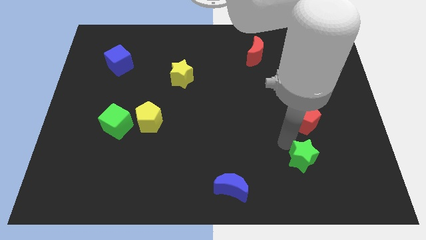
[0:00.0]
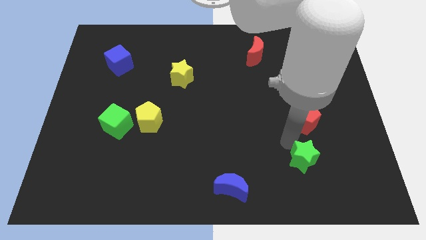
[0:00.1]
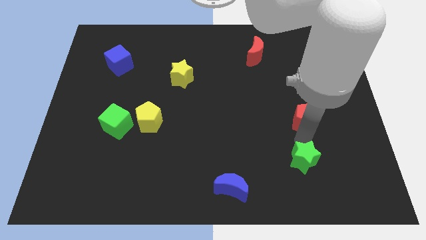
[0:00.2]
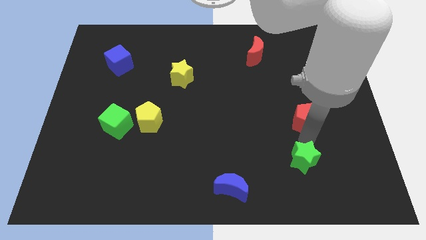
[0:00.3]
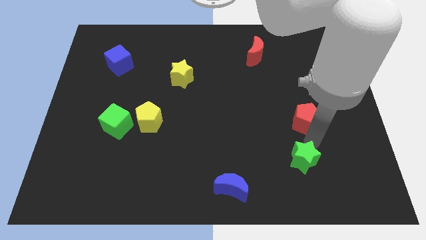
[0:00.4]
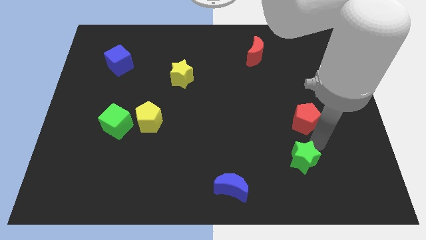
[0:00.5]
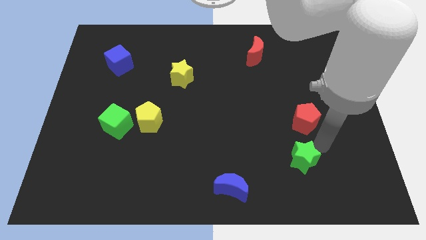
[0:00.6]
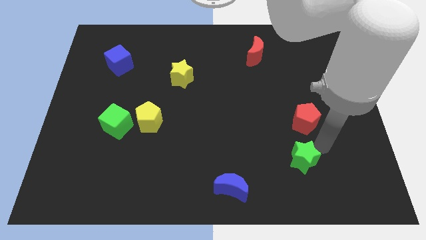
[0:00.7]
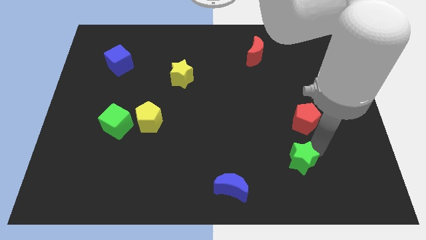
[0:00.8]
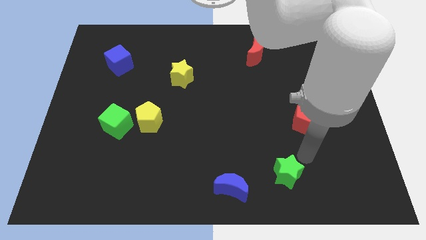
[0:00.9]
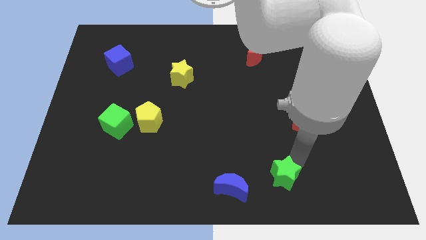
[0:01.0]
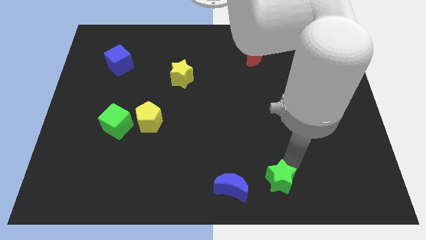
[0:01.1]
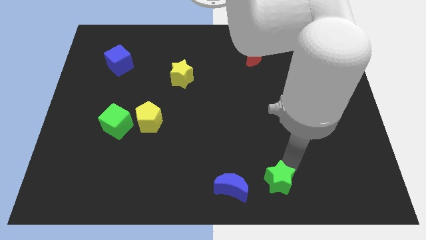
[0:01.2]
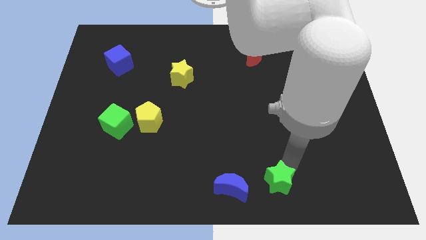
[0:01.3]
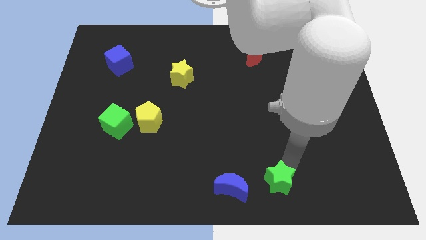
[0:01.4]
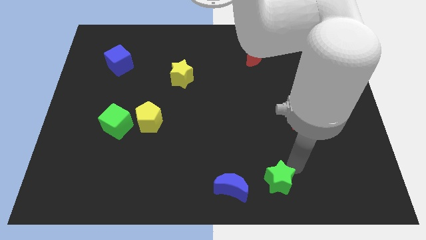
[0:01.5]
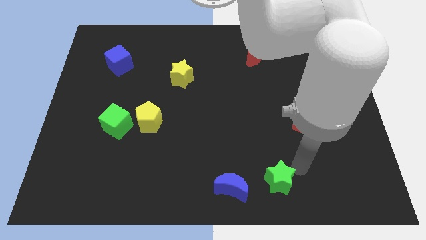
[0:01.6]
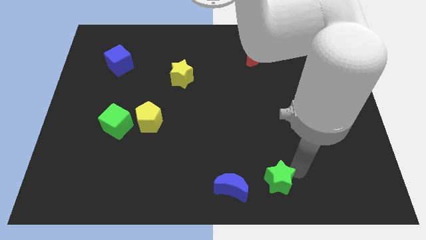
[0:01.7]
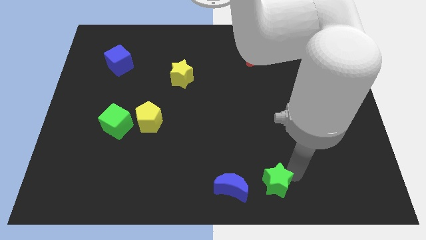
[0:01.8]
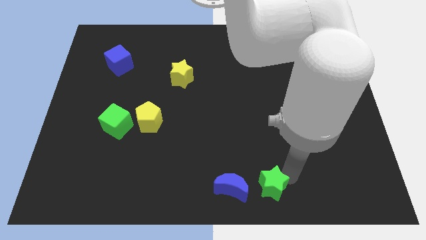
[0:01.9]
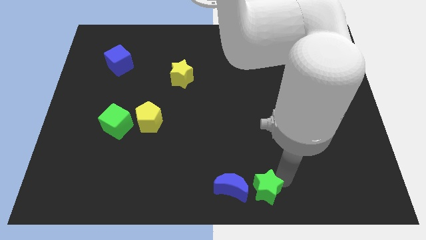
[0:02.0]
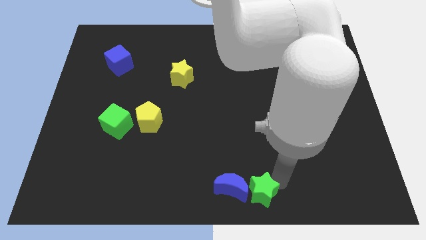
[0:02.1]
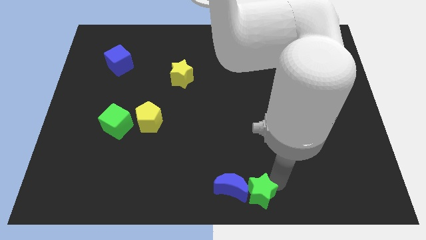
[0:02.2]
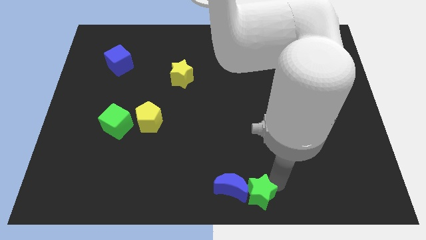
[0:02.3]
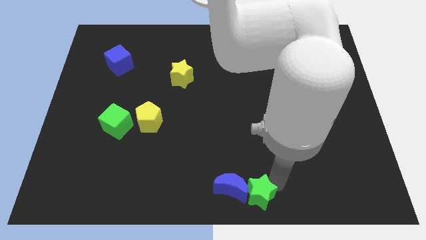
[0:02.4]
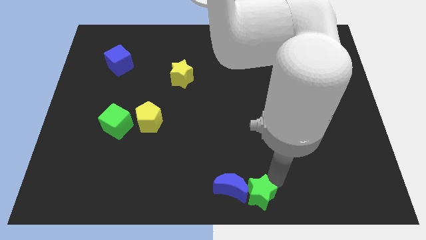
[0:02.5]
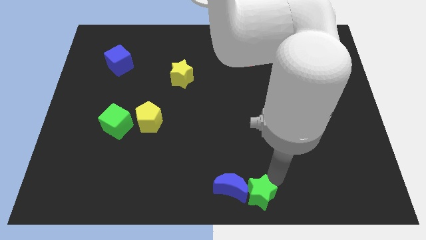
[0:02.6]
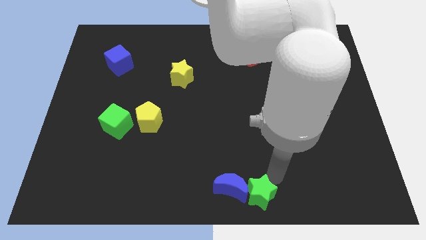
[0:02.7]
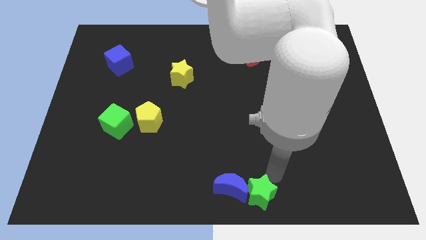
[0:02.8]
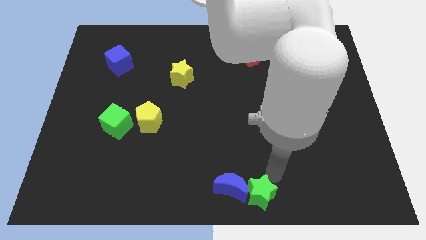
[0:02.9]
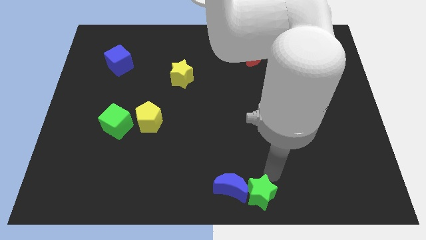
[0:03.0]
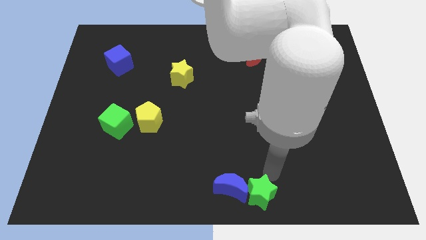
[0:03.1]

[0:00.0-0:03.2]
push the green star to the right of the blue crescent

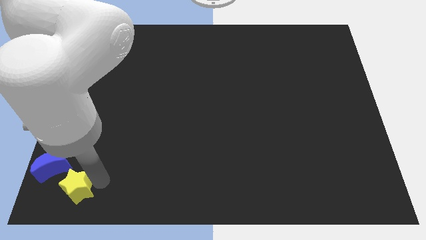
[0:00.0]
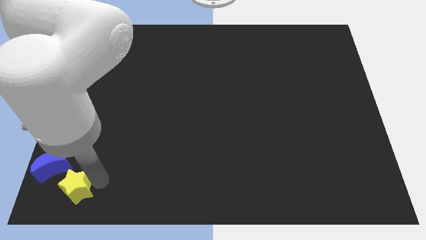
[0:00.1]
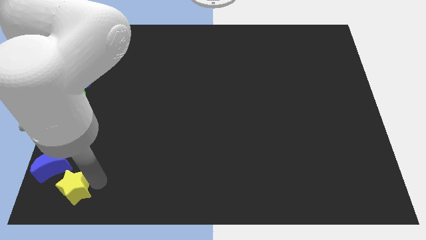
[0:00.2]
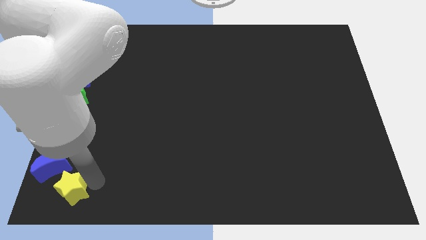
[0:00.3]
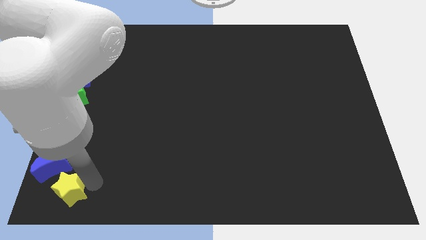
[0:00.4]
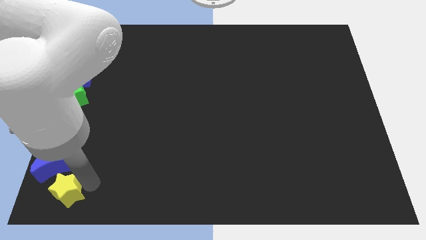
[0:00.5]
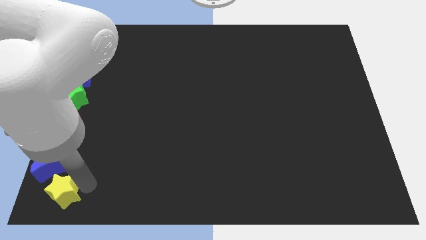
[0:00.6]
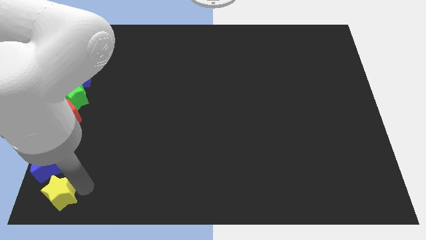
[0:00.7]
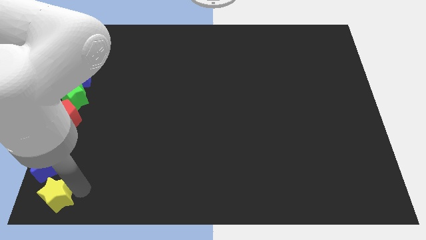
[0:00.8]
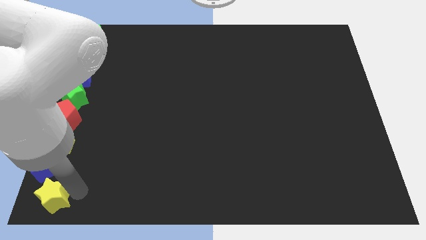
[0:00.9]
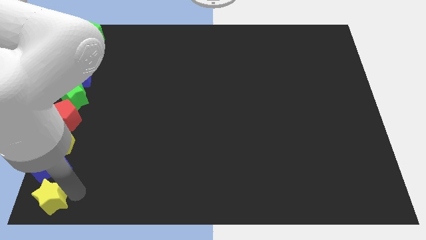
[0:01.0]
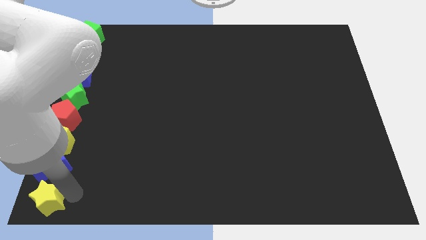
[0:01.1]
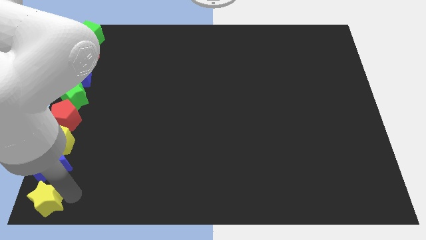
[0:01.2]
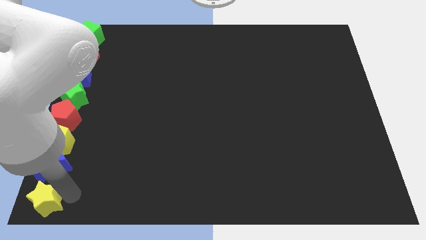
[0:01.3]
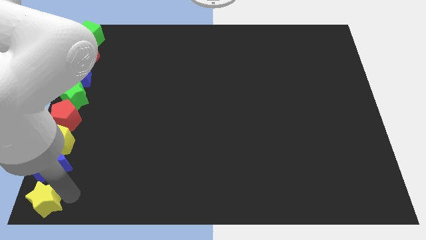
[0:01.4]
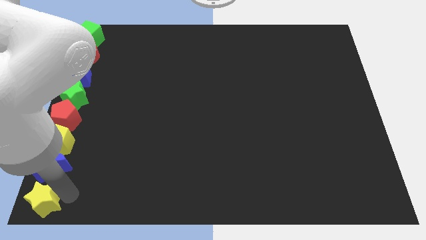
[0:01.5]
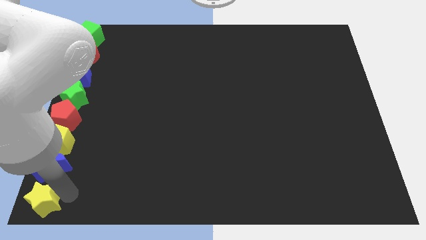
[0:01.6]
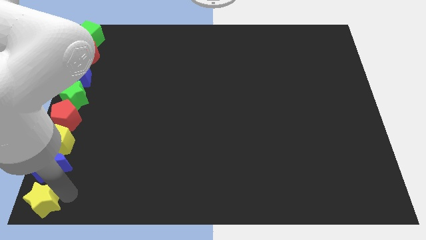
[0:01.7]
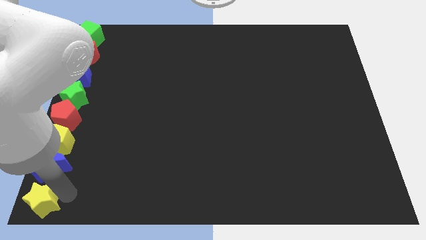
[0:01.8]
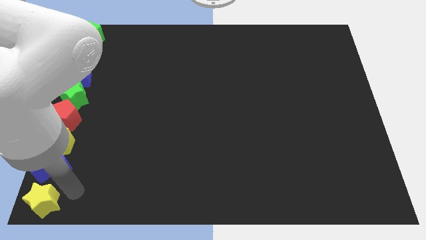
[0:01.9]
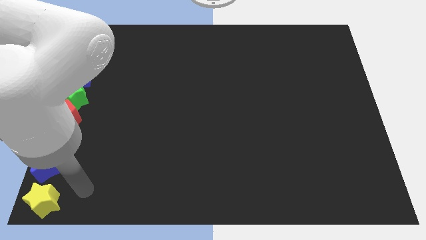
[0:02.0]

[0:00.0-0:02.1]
place the yellow star down to the blue moon

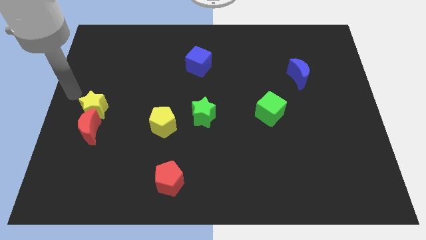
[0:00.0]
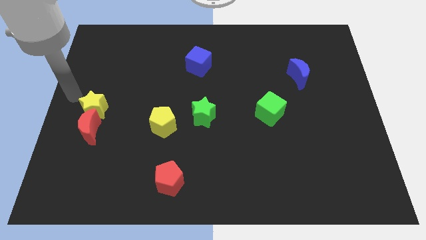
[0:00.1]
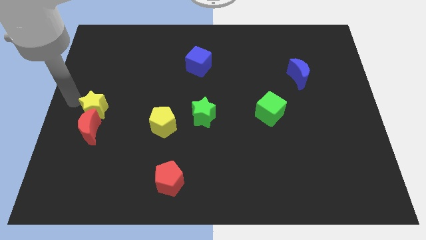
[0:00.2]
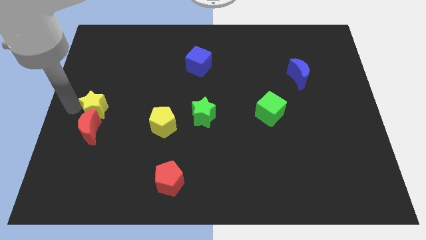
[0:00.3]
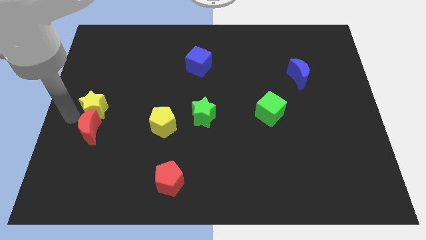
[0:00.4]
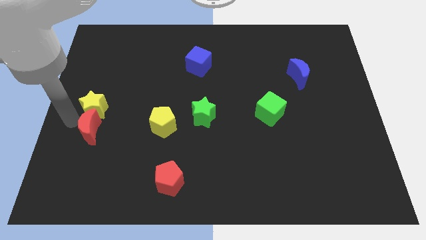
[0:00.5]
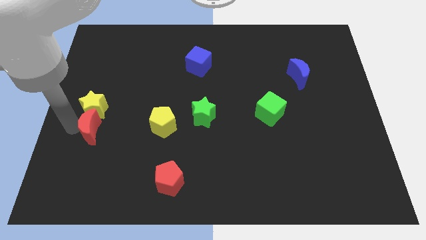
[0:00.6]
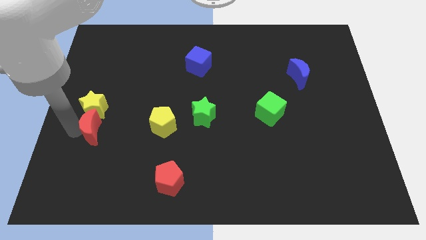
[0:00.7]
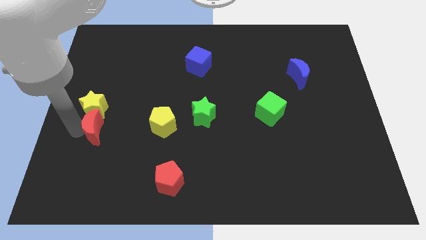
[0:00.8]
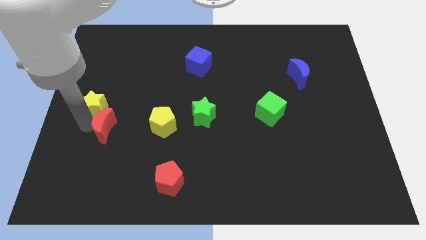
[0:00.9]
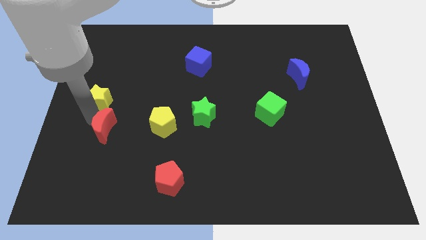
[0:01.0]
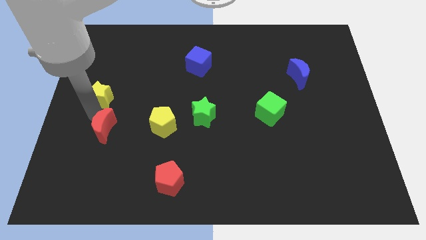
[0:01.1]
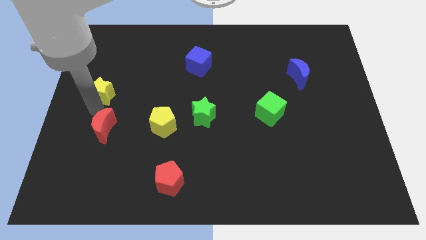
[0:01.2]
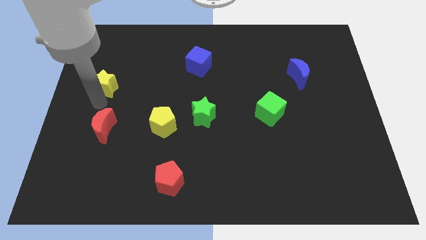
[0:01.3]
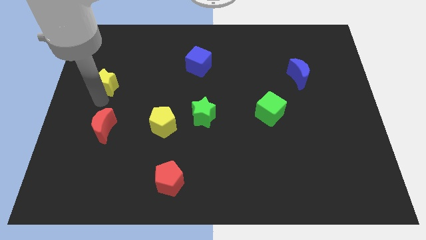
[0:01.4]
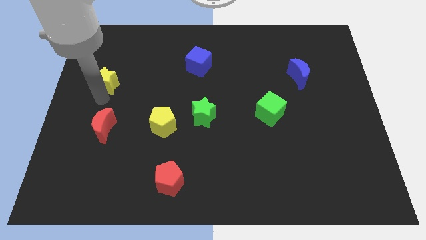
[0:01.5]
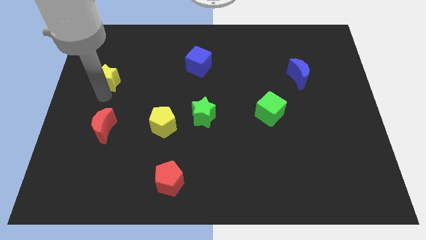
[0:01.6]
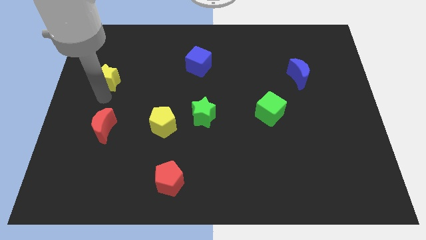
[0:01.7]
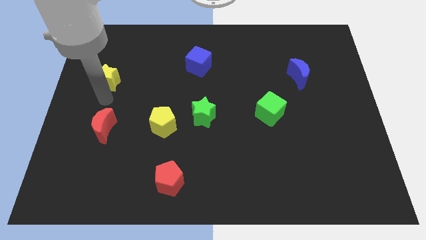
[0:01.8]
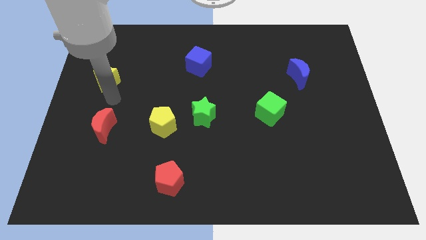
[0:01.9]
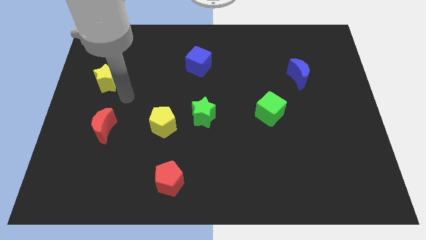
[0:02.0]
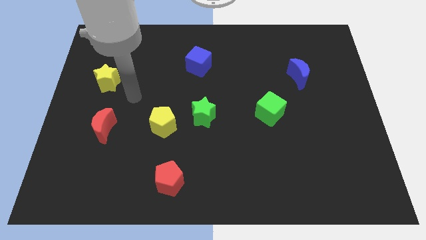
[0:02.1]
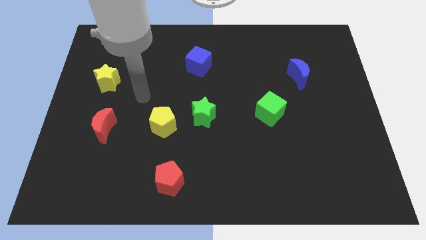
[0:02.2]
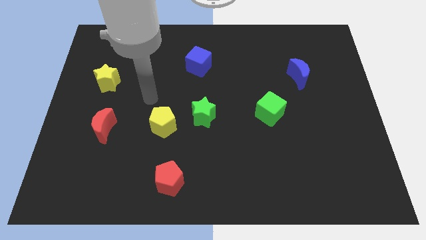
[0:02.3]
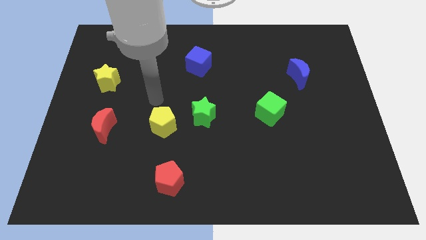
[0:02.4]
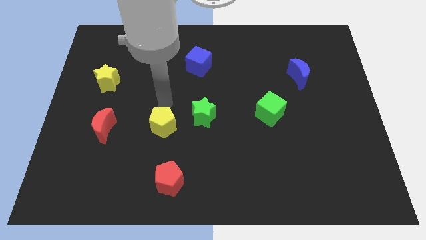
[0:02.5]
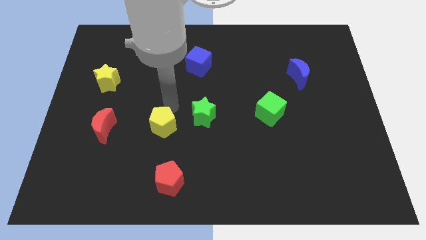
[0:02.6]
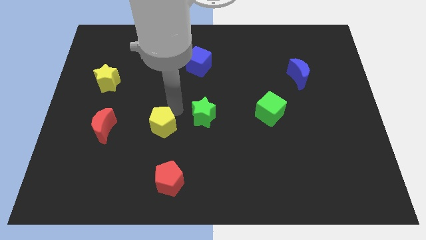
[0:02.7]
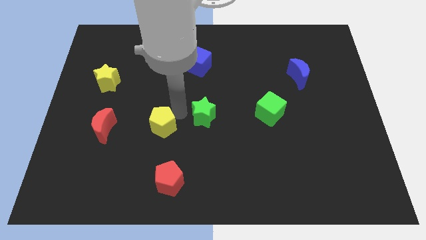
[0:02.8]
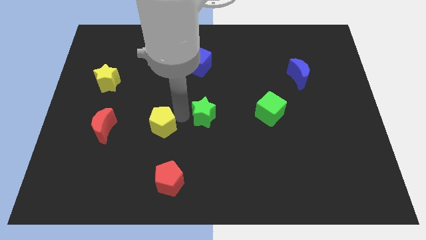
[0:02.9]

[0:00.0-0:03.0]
place the yellow star left to the blue moon

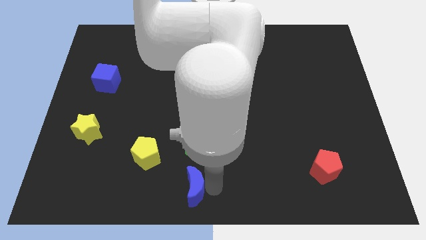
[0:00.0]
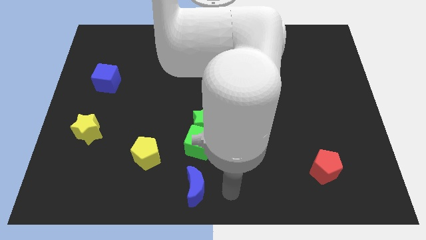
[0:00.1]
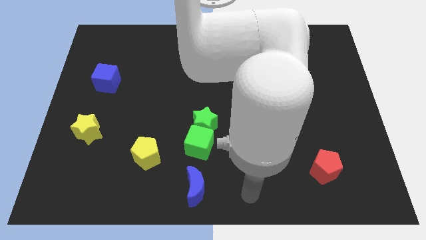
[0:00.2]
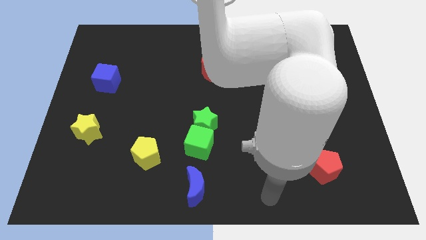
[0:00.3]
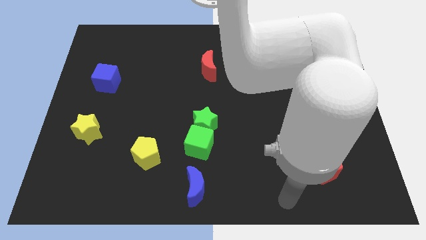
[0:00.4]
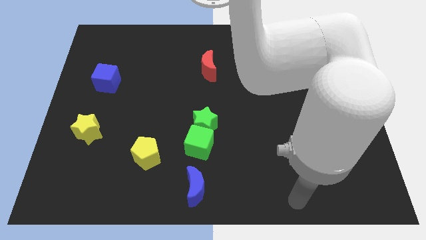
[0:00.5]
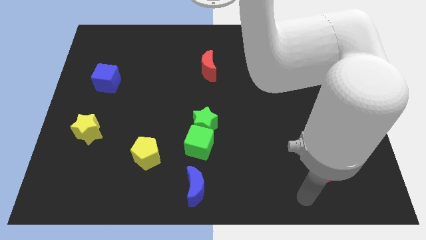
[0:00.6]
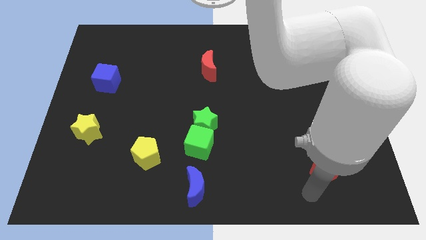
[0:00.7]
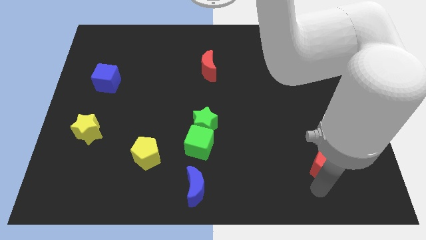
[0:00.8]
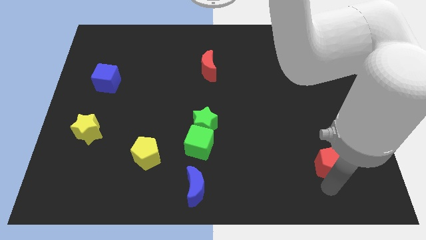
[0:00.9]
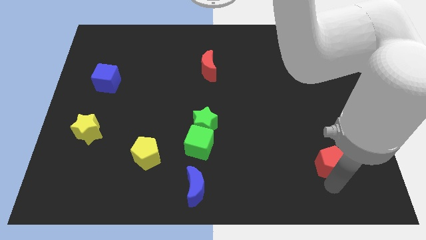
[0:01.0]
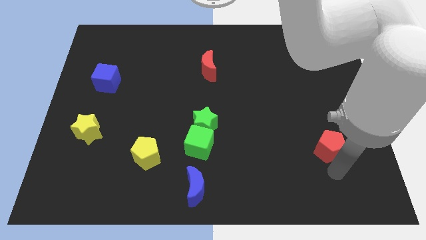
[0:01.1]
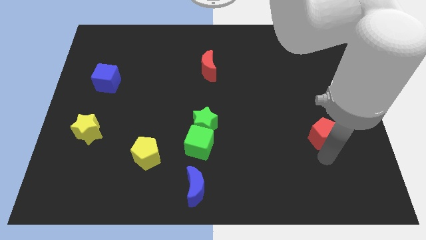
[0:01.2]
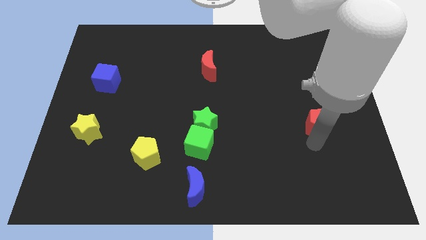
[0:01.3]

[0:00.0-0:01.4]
move red pentagon to the right of green star
